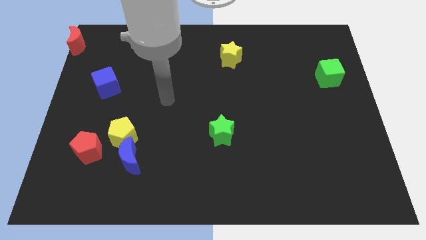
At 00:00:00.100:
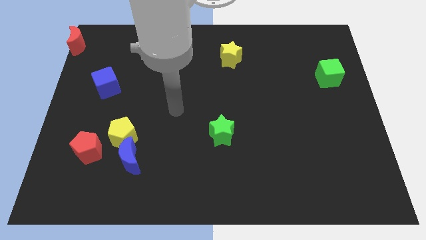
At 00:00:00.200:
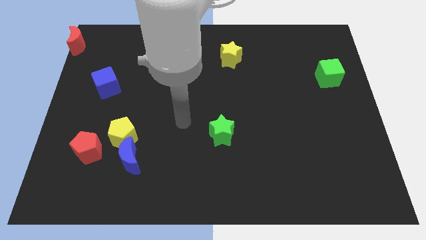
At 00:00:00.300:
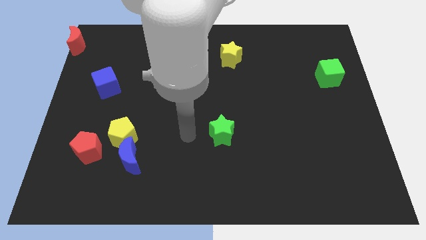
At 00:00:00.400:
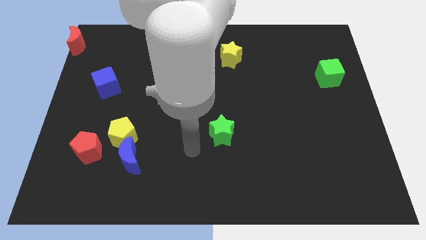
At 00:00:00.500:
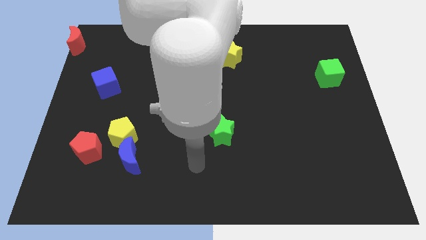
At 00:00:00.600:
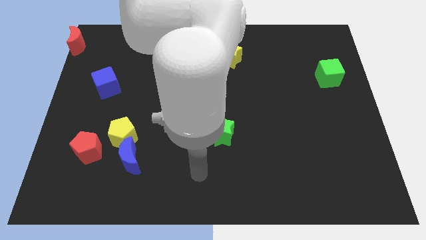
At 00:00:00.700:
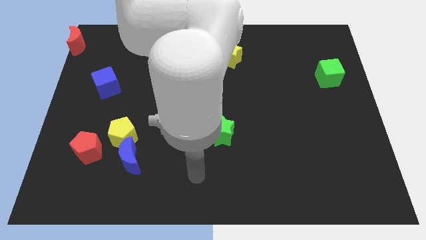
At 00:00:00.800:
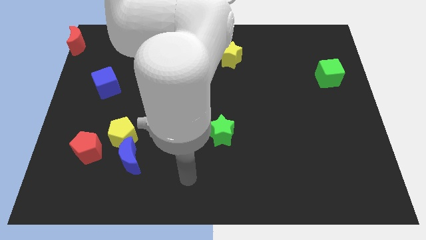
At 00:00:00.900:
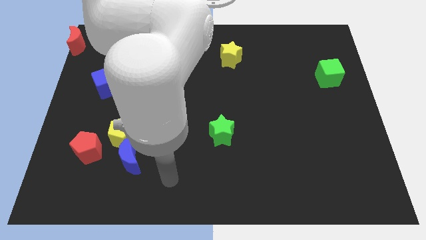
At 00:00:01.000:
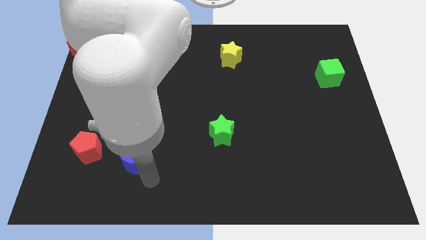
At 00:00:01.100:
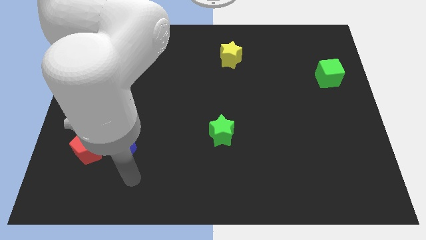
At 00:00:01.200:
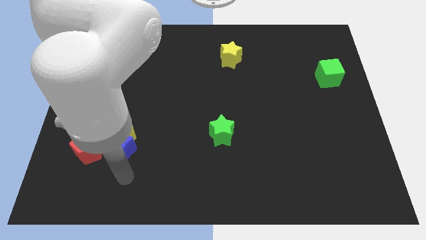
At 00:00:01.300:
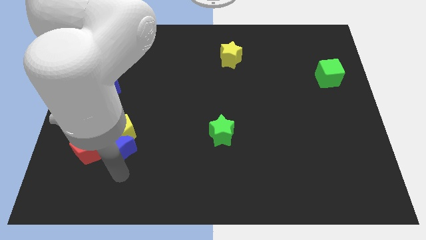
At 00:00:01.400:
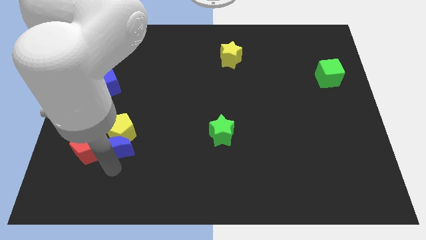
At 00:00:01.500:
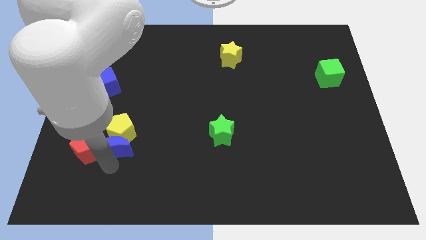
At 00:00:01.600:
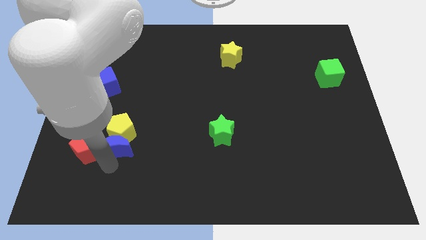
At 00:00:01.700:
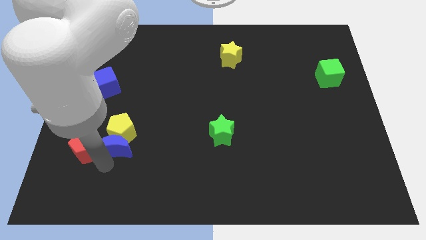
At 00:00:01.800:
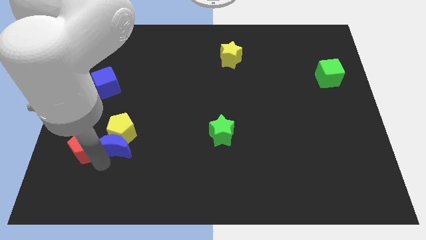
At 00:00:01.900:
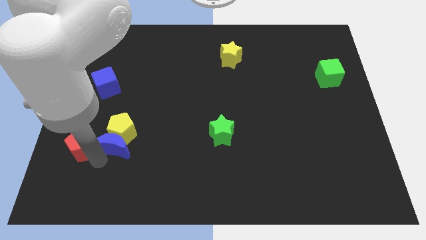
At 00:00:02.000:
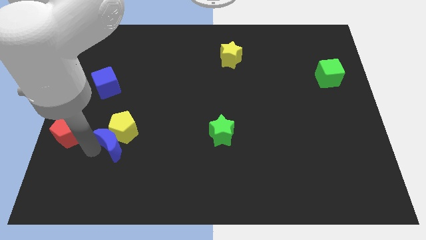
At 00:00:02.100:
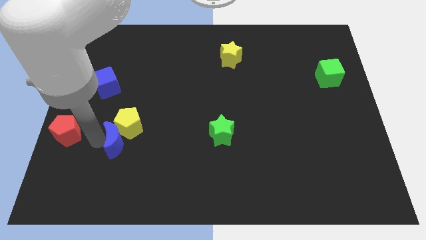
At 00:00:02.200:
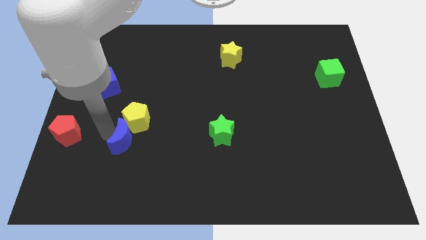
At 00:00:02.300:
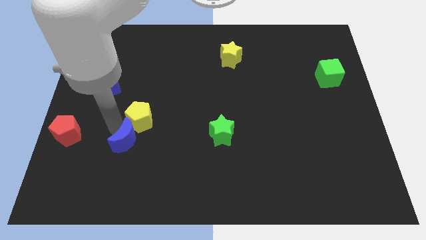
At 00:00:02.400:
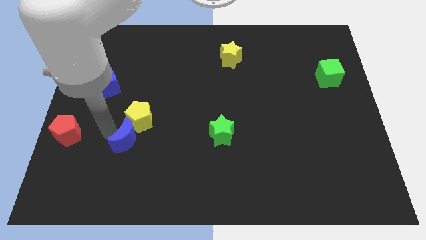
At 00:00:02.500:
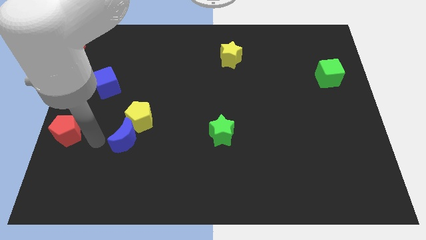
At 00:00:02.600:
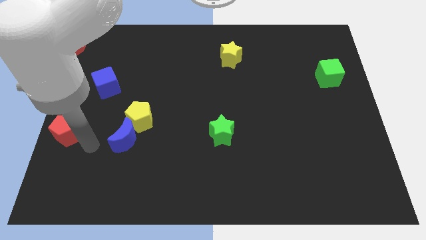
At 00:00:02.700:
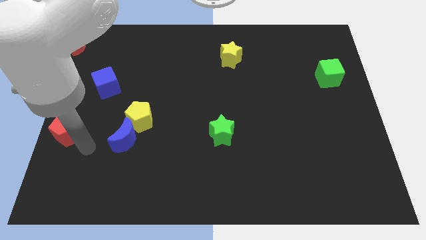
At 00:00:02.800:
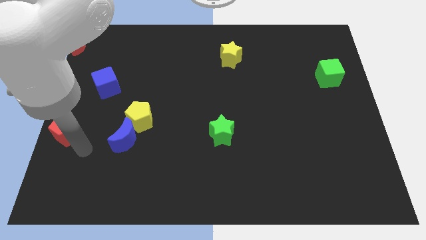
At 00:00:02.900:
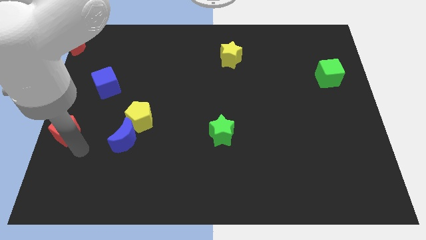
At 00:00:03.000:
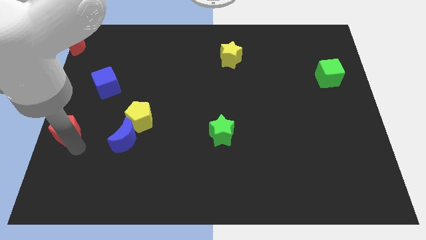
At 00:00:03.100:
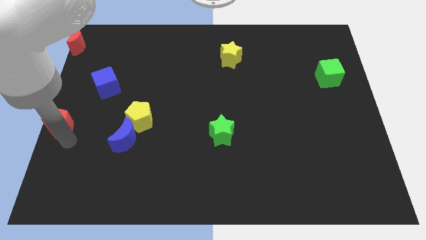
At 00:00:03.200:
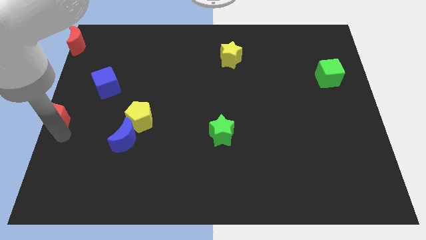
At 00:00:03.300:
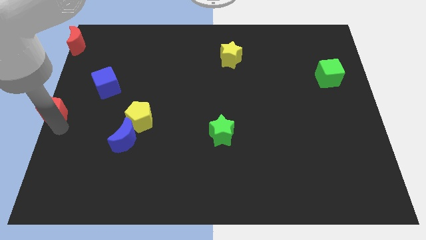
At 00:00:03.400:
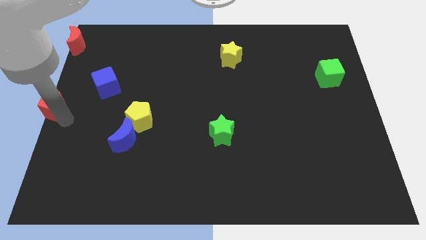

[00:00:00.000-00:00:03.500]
separate the red pentagon from the yellow pentagon and blue moon

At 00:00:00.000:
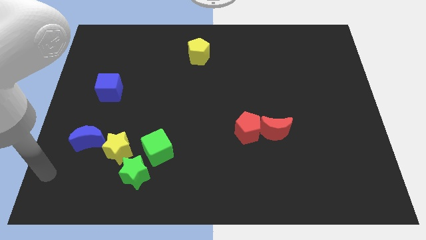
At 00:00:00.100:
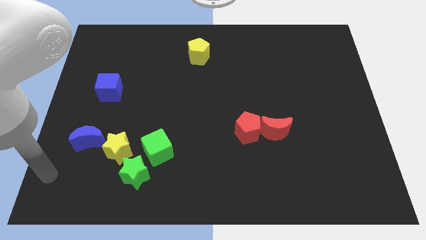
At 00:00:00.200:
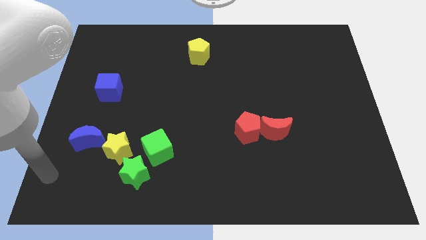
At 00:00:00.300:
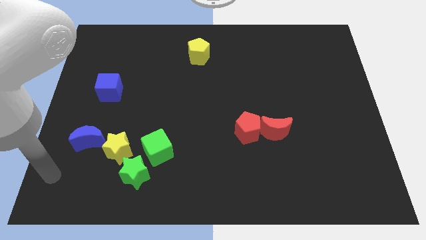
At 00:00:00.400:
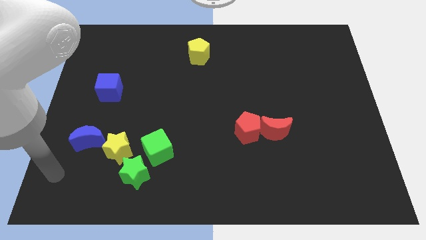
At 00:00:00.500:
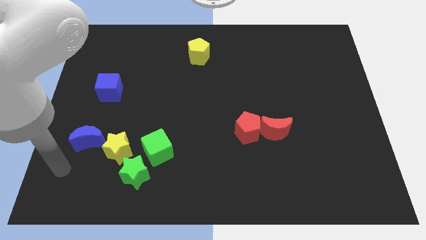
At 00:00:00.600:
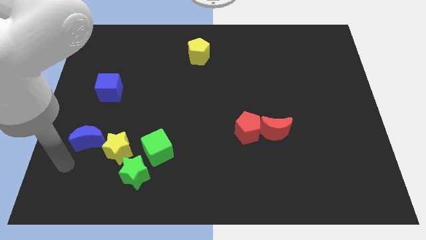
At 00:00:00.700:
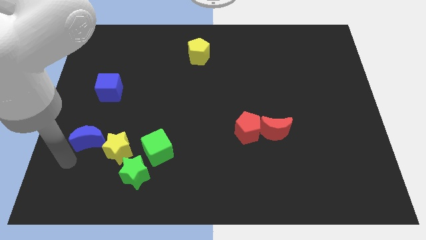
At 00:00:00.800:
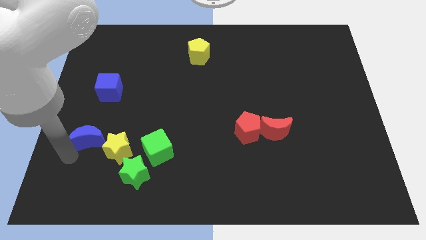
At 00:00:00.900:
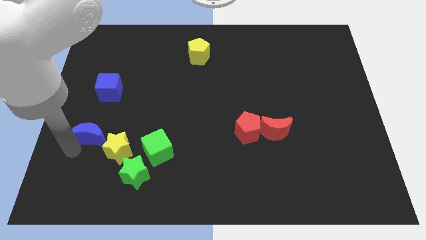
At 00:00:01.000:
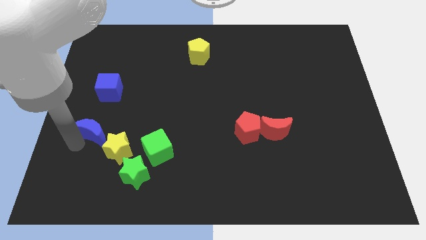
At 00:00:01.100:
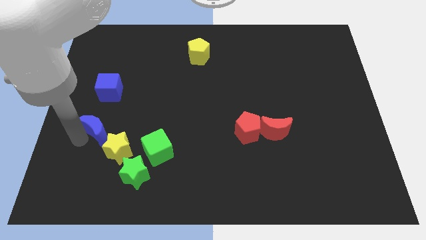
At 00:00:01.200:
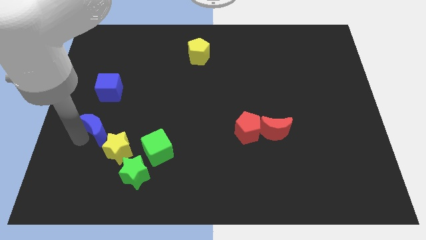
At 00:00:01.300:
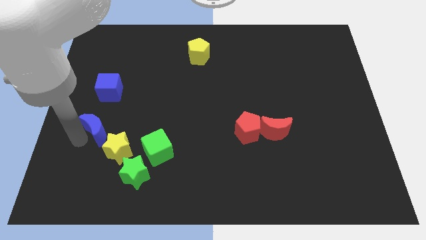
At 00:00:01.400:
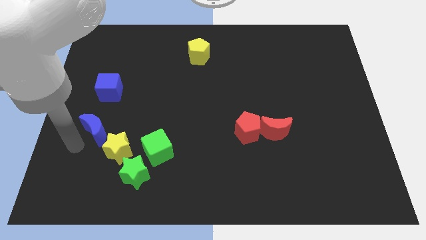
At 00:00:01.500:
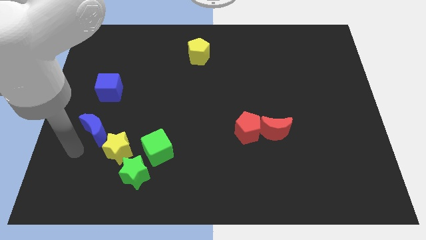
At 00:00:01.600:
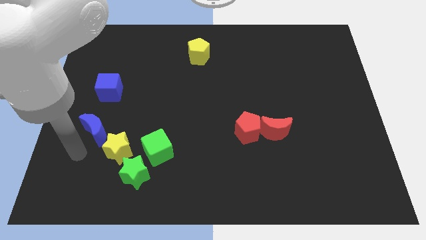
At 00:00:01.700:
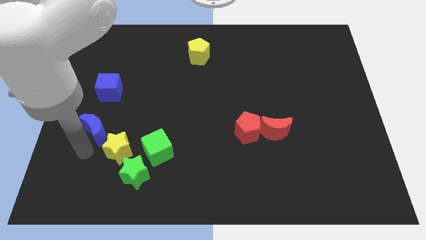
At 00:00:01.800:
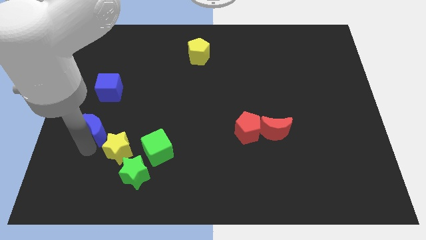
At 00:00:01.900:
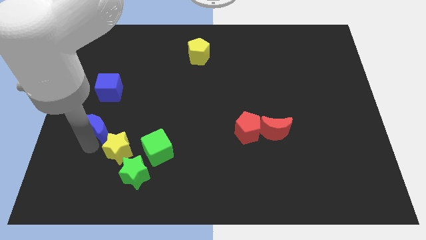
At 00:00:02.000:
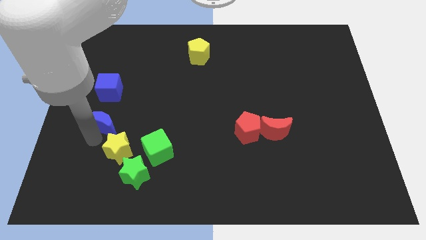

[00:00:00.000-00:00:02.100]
move the blue crescent to the top left of the yellow star

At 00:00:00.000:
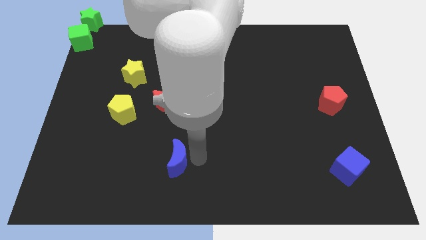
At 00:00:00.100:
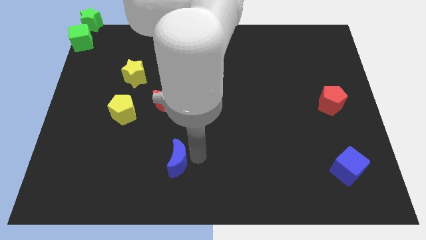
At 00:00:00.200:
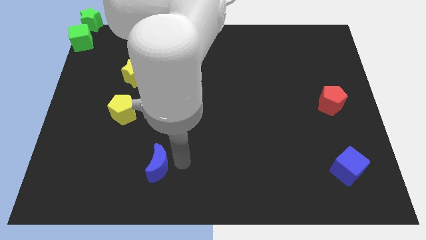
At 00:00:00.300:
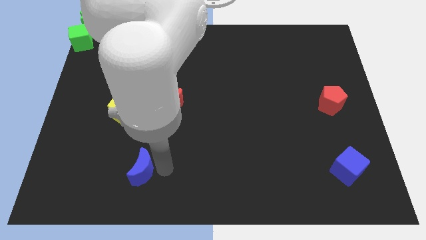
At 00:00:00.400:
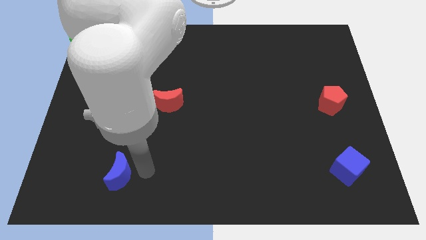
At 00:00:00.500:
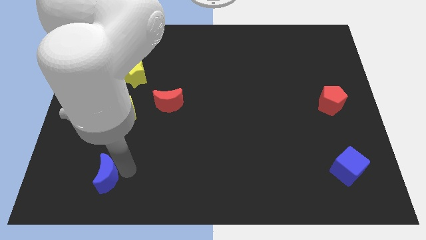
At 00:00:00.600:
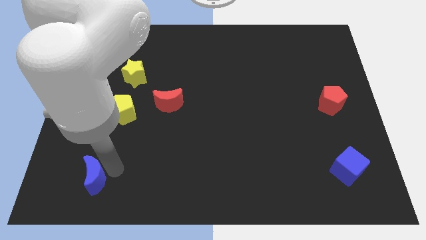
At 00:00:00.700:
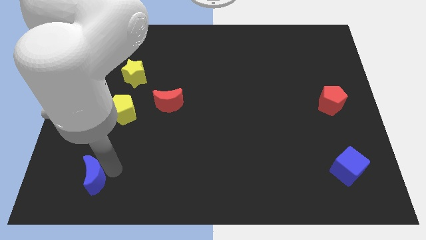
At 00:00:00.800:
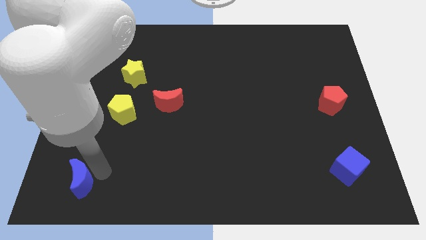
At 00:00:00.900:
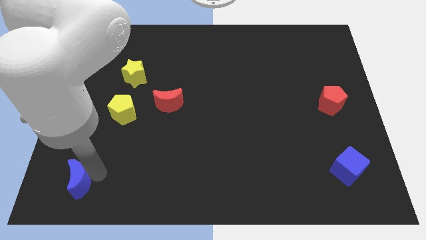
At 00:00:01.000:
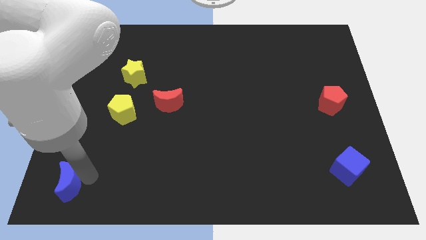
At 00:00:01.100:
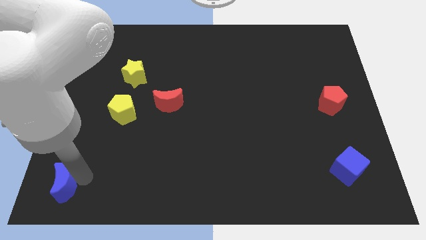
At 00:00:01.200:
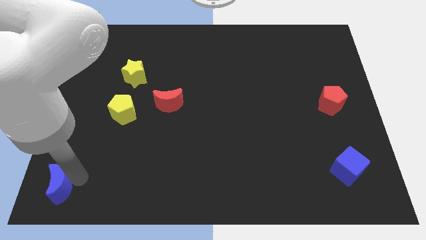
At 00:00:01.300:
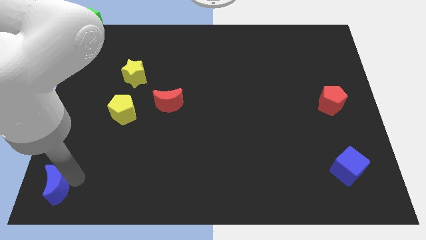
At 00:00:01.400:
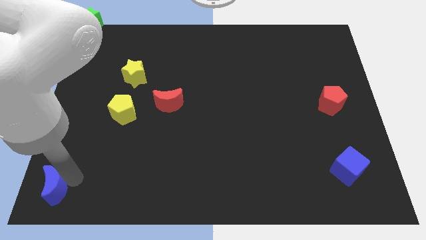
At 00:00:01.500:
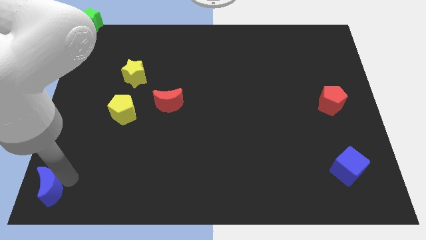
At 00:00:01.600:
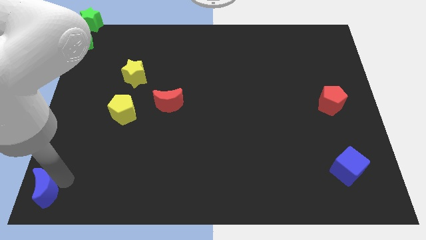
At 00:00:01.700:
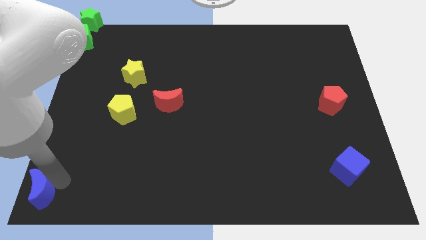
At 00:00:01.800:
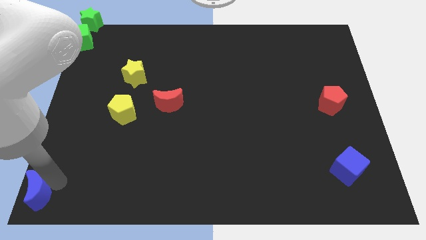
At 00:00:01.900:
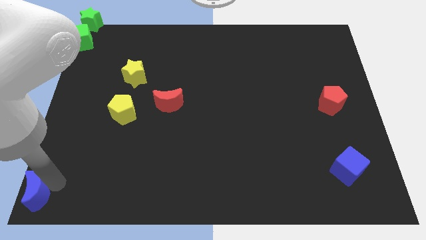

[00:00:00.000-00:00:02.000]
push the blue crescent to the bottom left corner of the board

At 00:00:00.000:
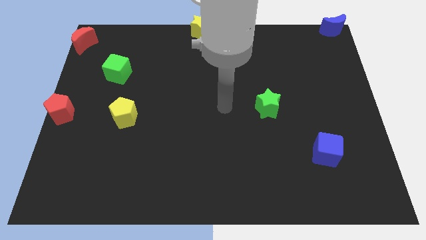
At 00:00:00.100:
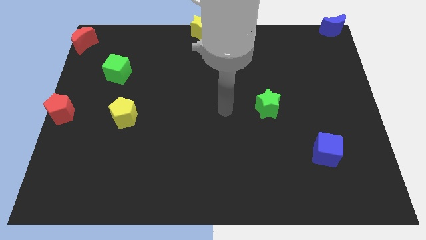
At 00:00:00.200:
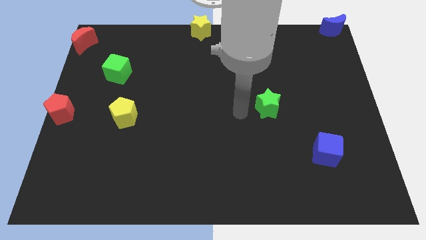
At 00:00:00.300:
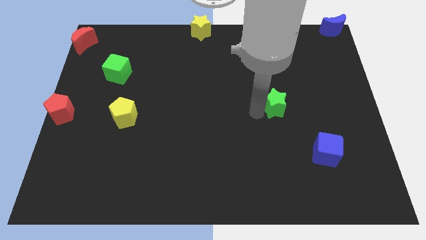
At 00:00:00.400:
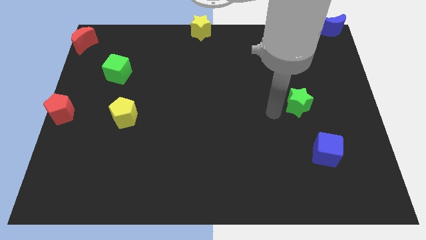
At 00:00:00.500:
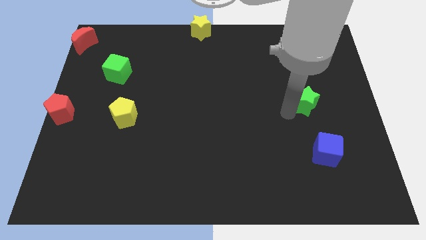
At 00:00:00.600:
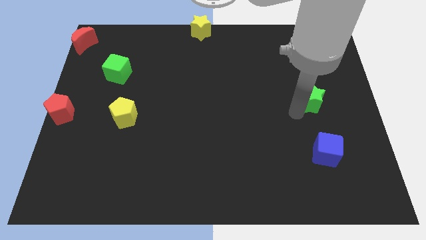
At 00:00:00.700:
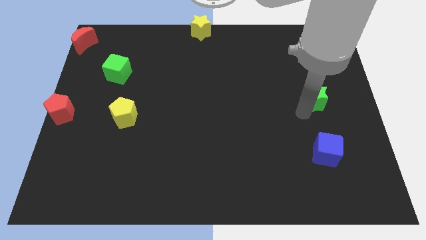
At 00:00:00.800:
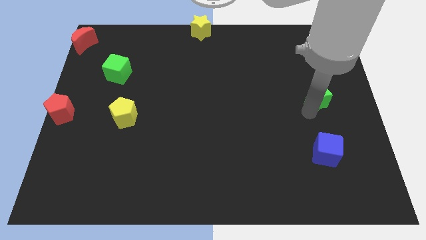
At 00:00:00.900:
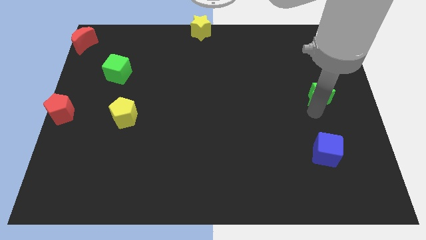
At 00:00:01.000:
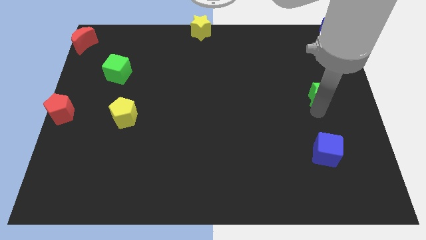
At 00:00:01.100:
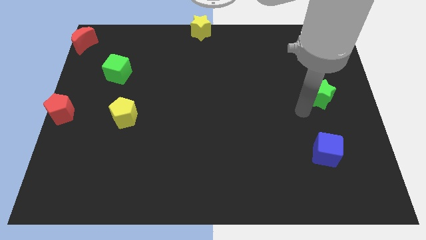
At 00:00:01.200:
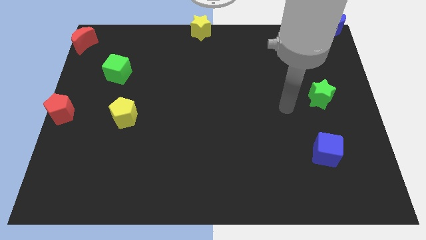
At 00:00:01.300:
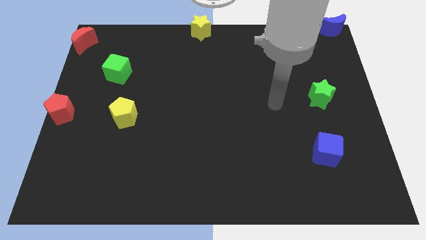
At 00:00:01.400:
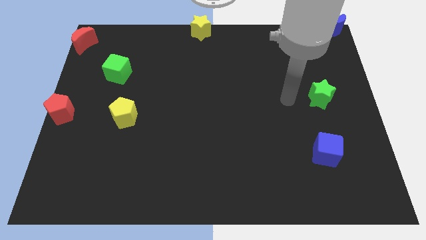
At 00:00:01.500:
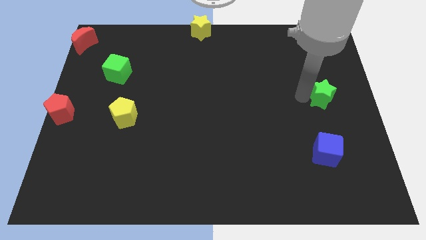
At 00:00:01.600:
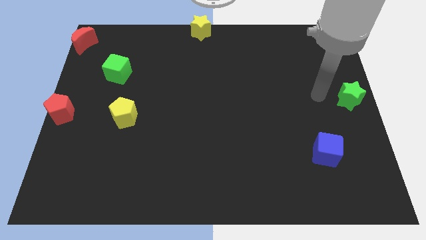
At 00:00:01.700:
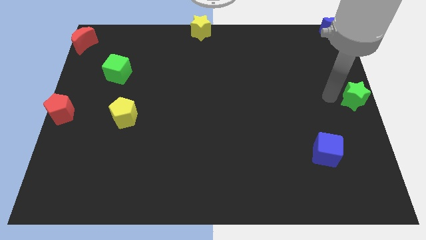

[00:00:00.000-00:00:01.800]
place the green star diagonally to the right side of the blue cube
